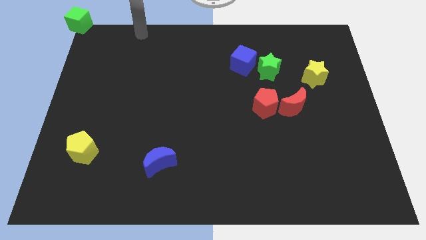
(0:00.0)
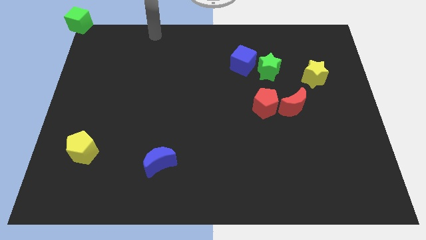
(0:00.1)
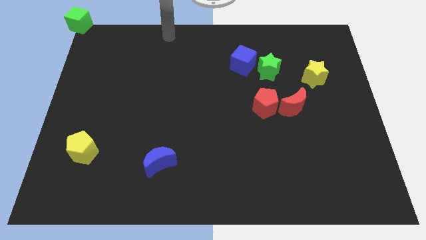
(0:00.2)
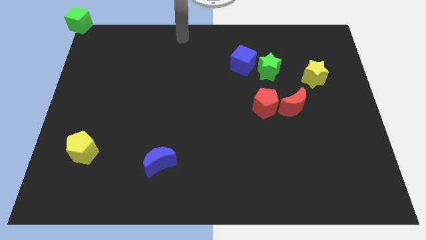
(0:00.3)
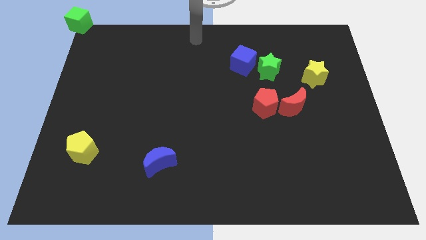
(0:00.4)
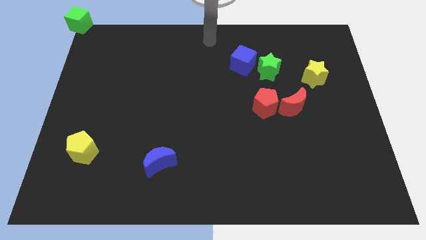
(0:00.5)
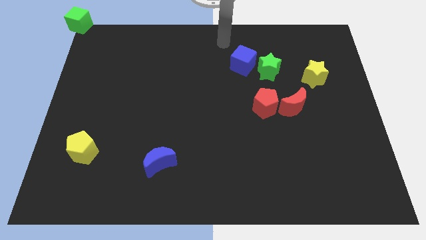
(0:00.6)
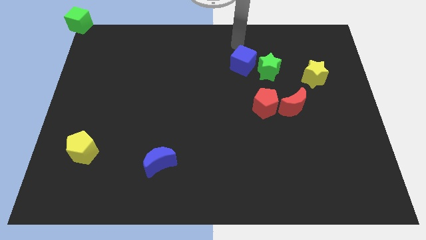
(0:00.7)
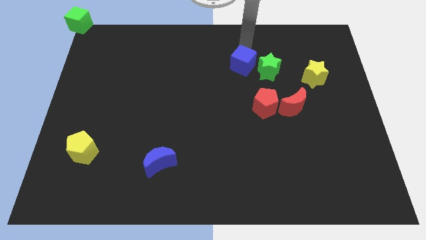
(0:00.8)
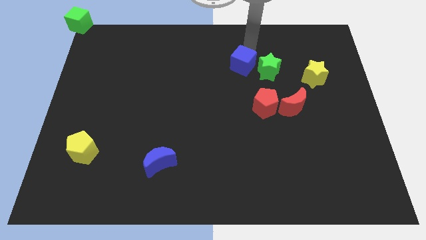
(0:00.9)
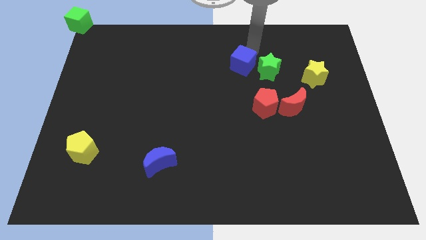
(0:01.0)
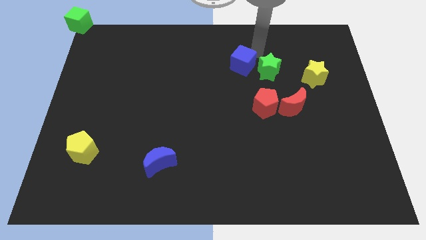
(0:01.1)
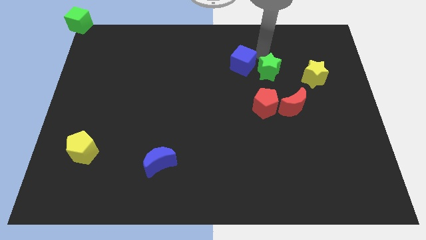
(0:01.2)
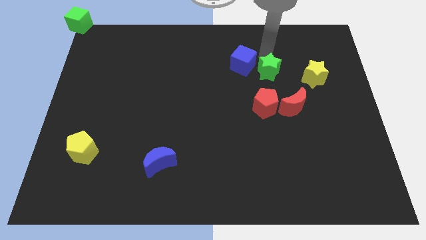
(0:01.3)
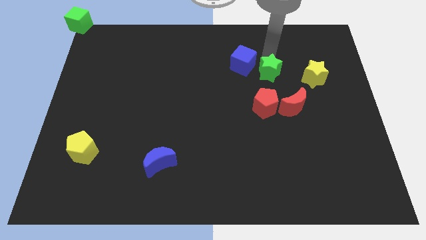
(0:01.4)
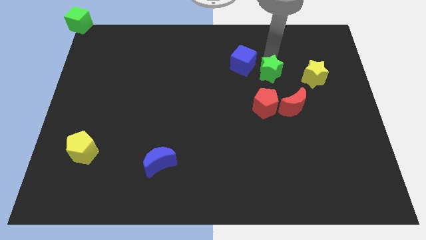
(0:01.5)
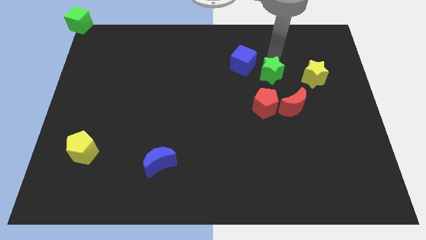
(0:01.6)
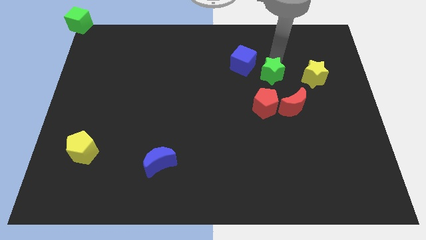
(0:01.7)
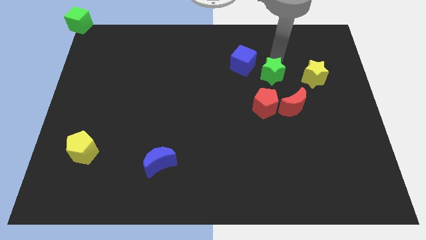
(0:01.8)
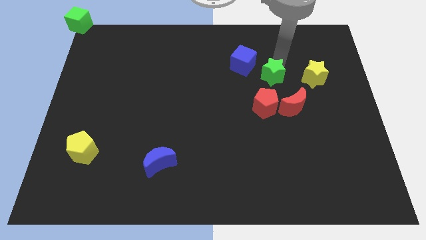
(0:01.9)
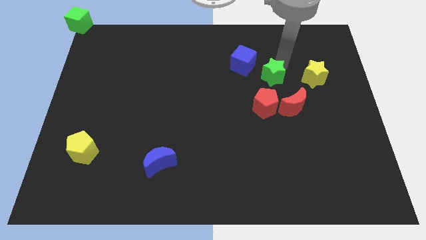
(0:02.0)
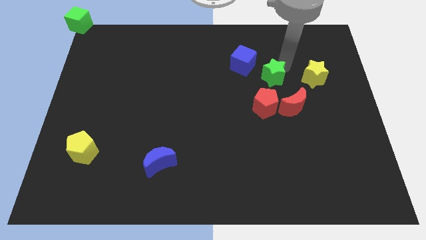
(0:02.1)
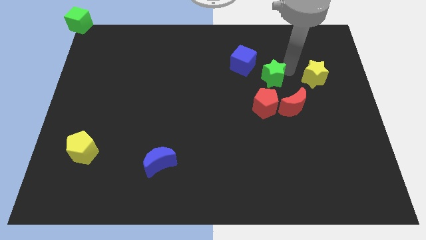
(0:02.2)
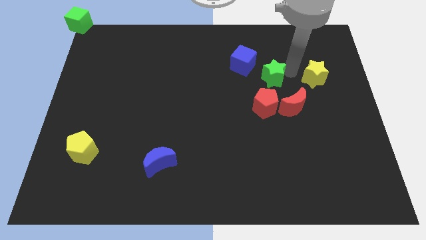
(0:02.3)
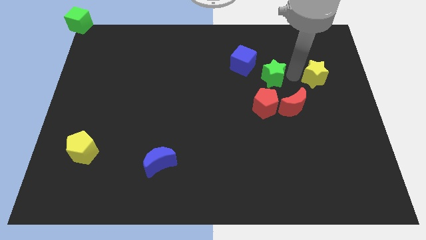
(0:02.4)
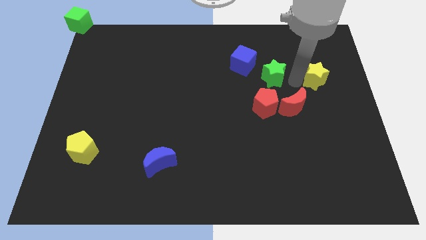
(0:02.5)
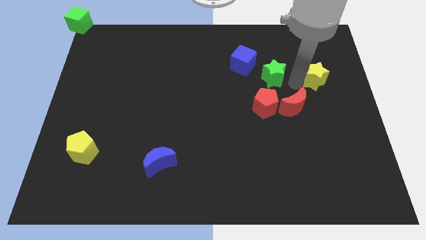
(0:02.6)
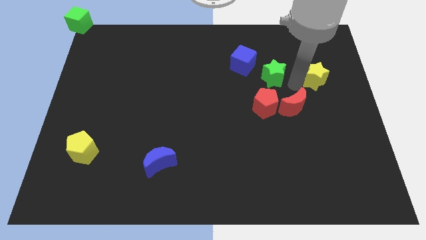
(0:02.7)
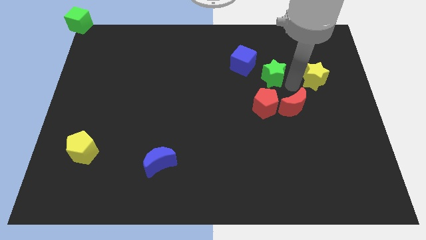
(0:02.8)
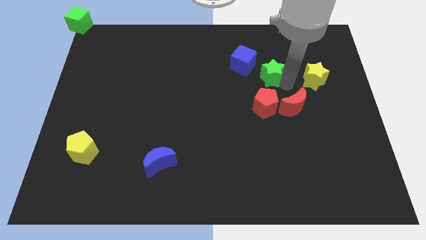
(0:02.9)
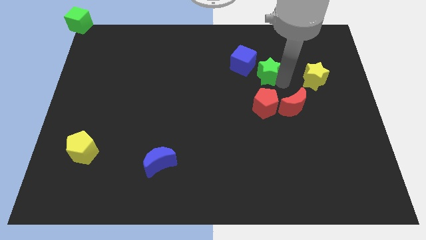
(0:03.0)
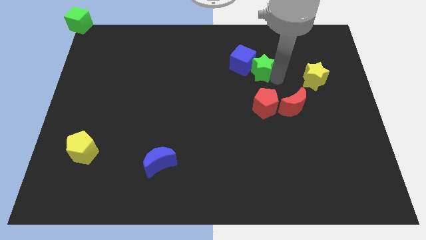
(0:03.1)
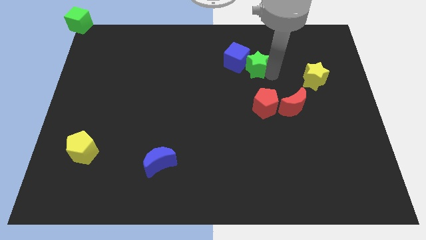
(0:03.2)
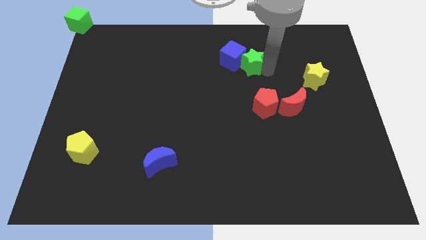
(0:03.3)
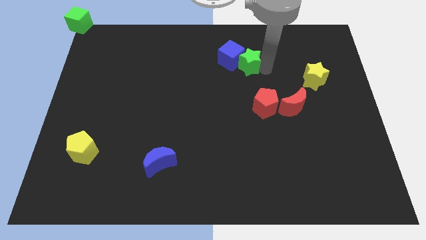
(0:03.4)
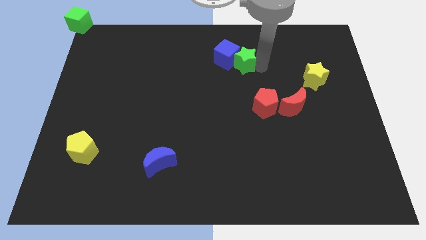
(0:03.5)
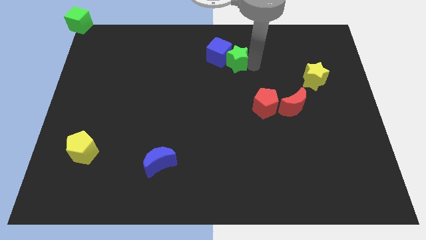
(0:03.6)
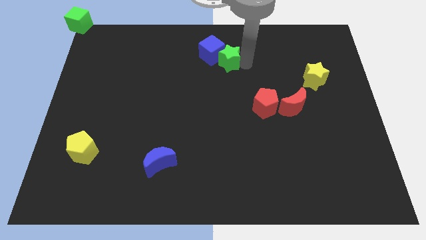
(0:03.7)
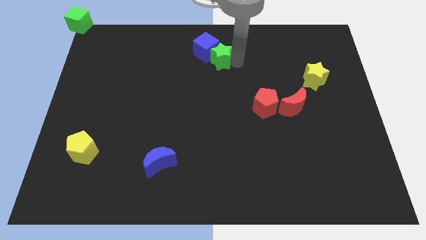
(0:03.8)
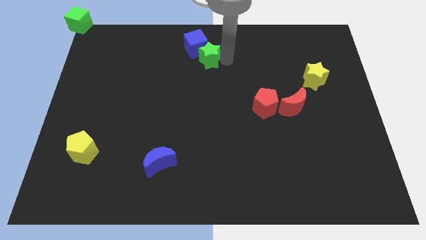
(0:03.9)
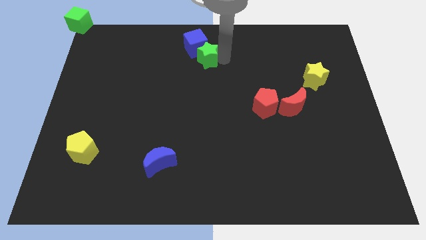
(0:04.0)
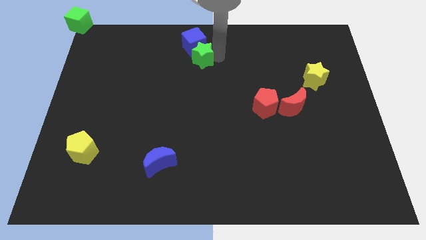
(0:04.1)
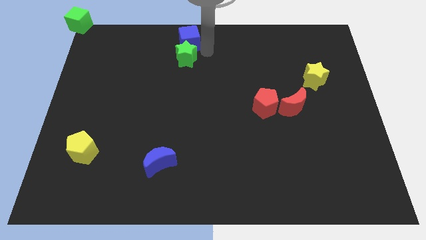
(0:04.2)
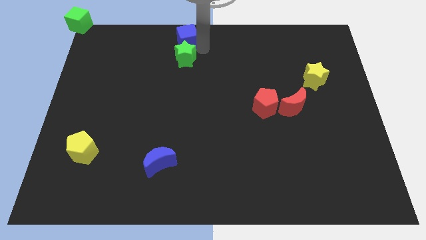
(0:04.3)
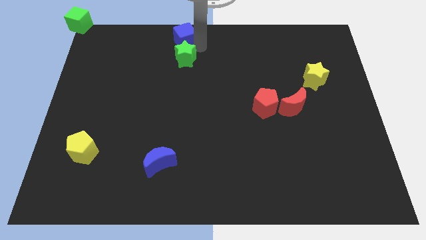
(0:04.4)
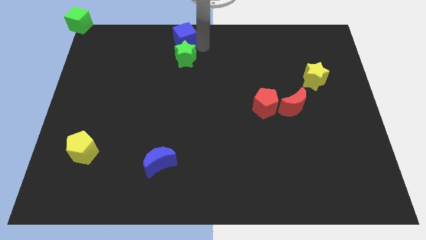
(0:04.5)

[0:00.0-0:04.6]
push the green star into the blue cube

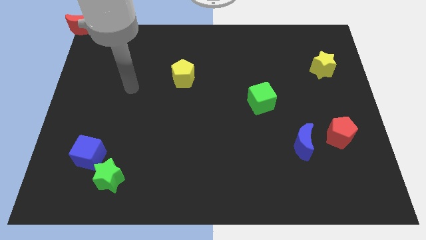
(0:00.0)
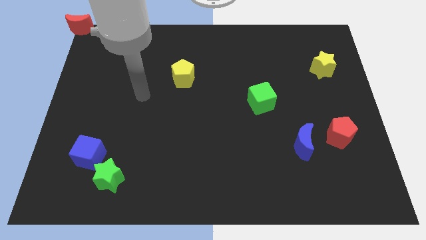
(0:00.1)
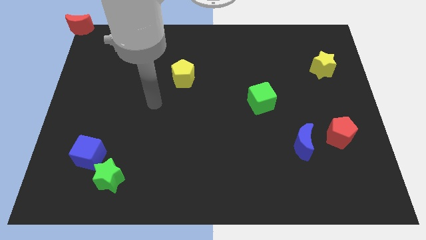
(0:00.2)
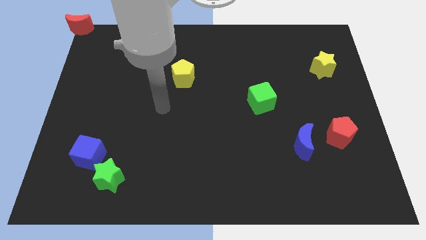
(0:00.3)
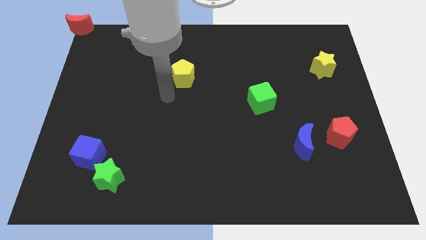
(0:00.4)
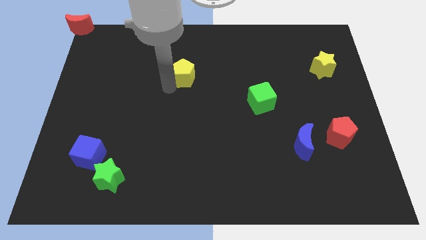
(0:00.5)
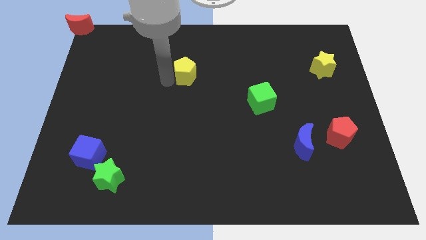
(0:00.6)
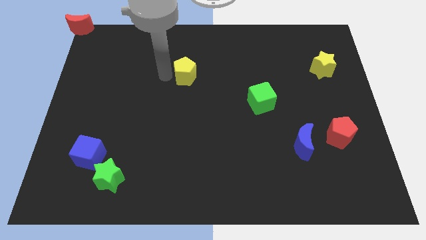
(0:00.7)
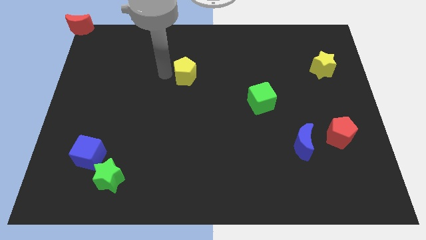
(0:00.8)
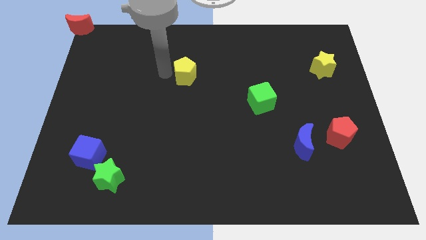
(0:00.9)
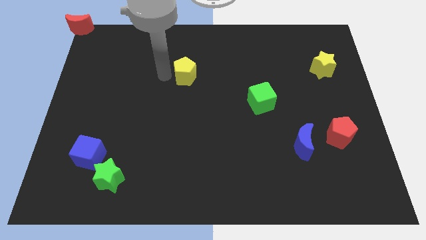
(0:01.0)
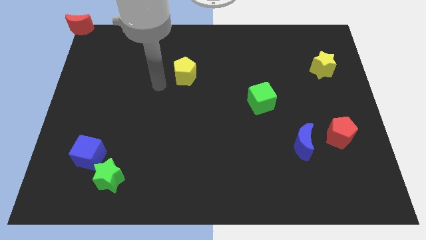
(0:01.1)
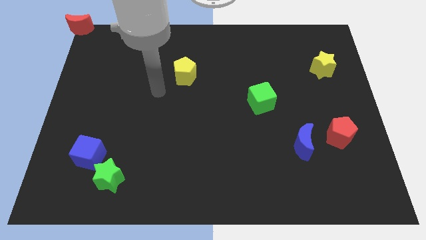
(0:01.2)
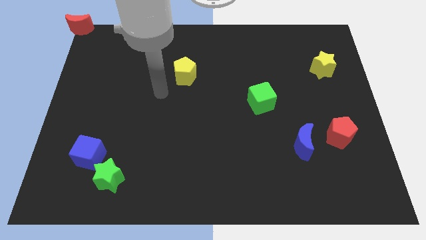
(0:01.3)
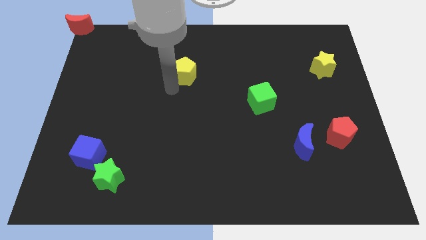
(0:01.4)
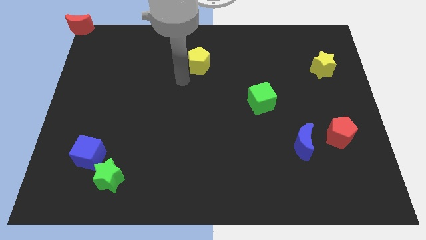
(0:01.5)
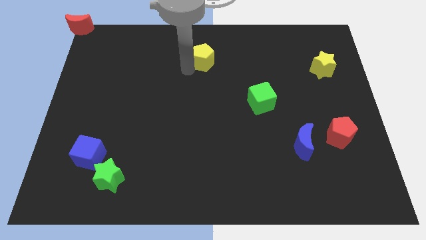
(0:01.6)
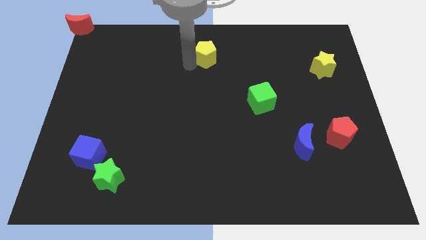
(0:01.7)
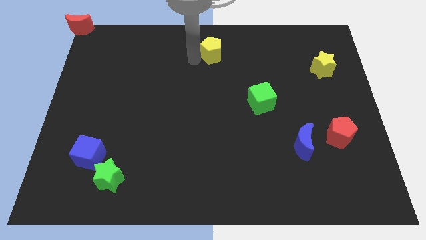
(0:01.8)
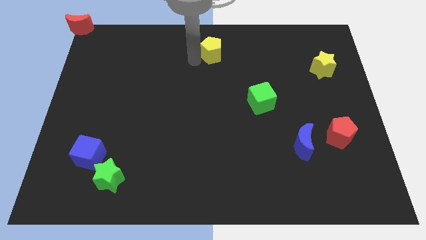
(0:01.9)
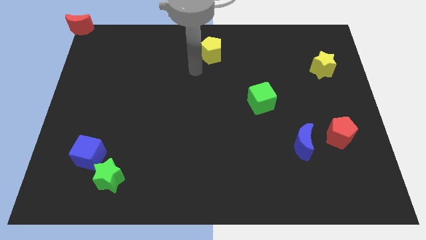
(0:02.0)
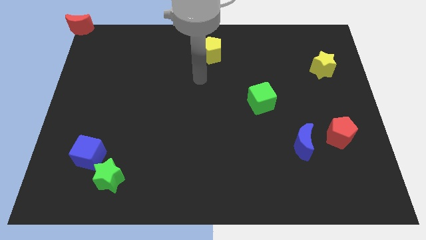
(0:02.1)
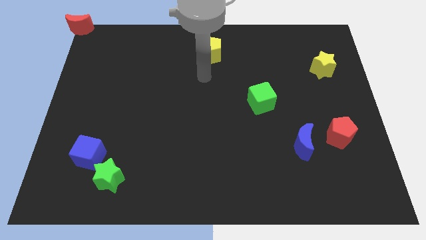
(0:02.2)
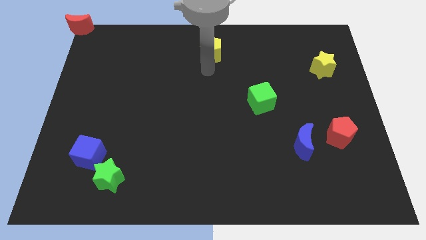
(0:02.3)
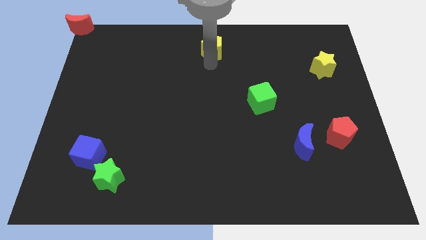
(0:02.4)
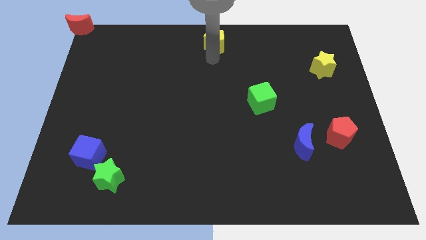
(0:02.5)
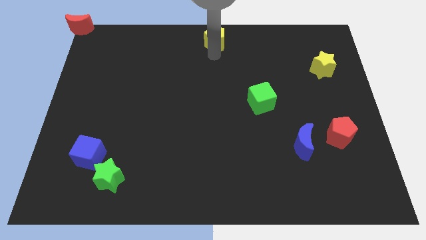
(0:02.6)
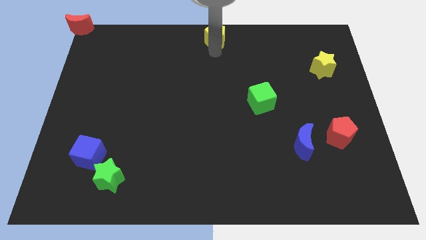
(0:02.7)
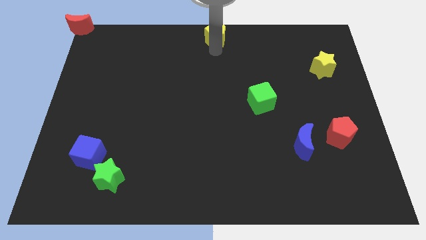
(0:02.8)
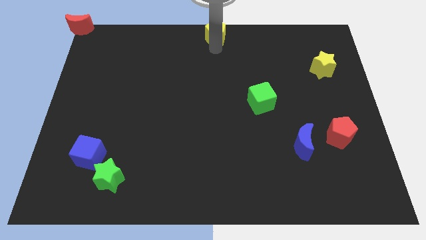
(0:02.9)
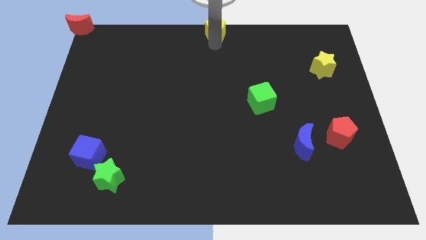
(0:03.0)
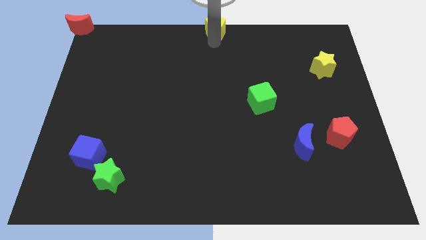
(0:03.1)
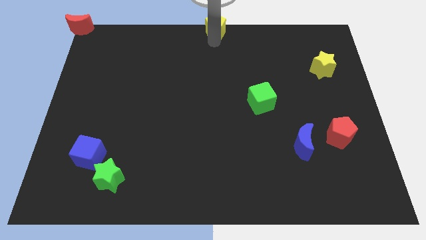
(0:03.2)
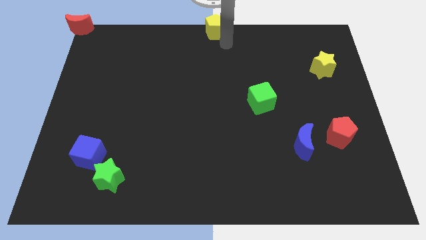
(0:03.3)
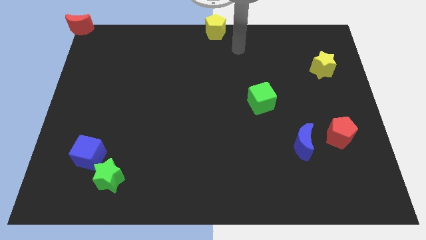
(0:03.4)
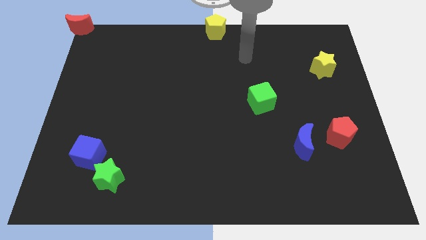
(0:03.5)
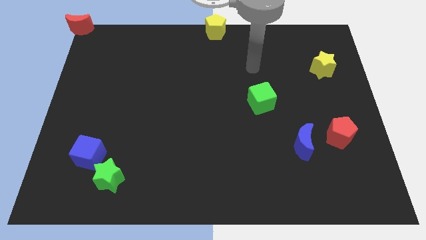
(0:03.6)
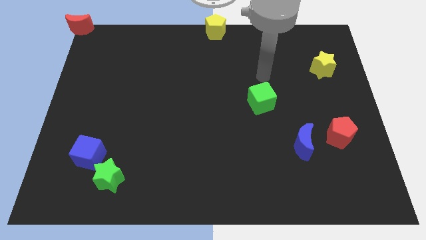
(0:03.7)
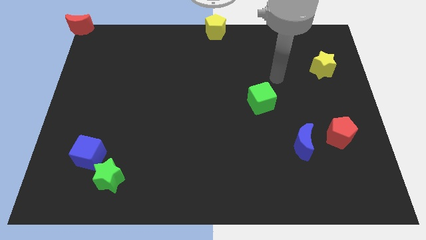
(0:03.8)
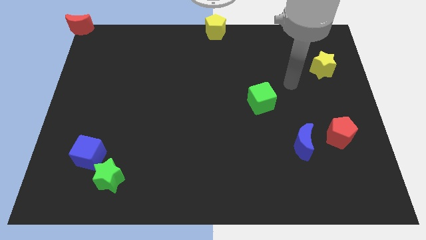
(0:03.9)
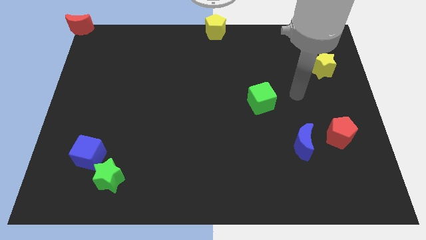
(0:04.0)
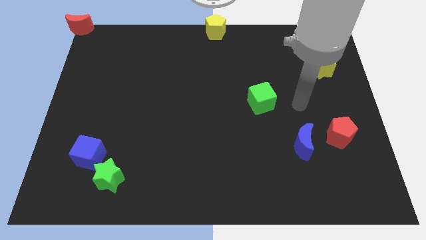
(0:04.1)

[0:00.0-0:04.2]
move yellow pentagon towards the top center of the board

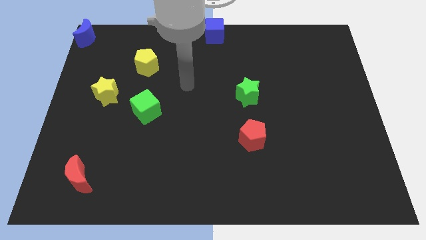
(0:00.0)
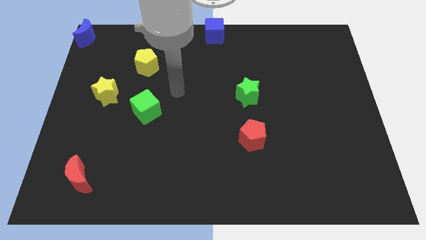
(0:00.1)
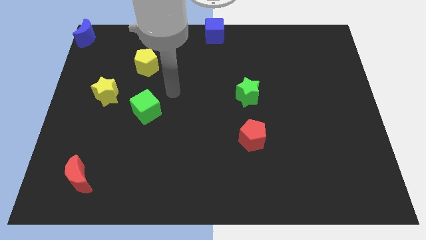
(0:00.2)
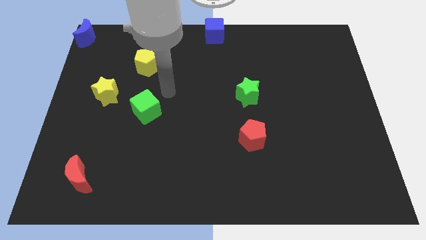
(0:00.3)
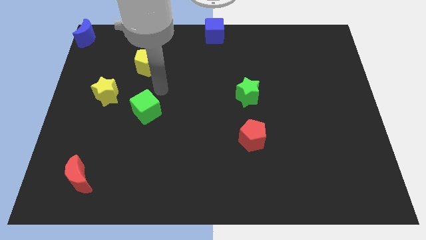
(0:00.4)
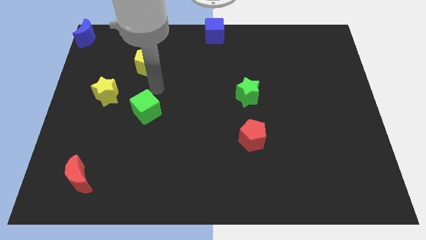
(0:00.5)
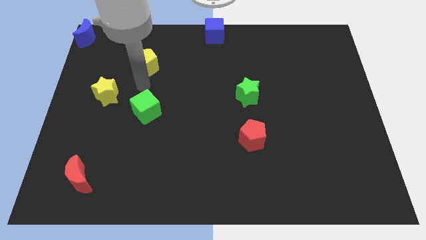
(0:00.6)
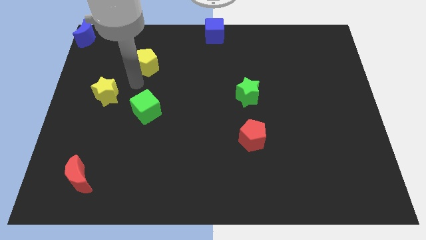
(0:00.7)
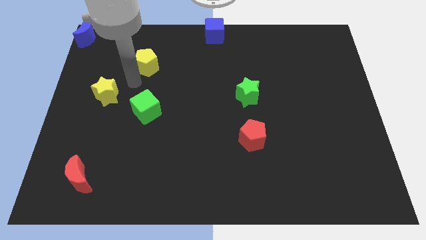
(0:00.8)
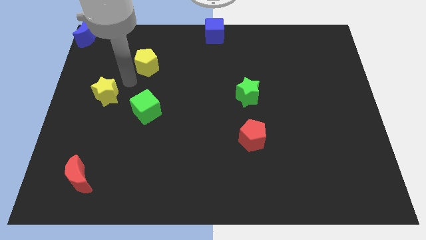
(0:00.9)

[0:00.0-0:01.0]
place your arm in between the yellow blocks
